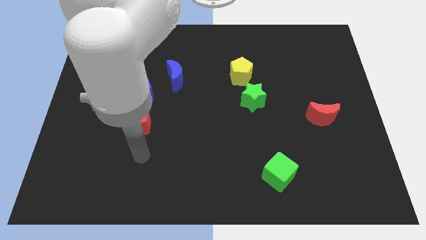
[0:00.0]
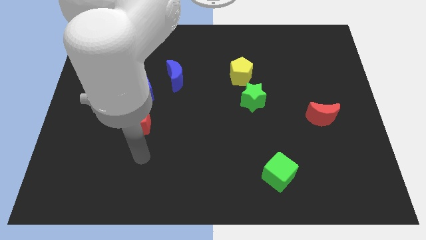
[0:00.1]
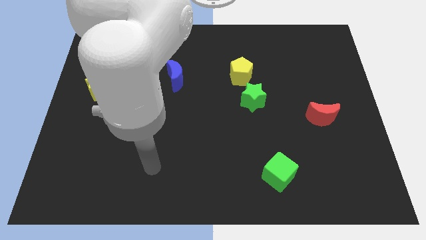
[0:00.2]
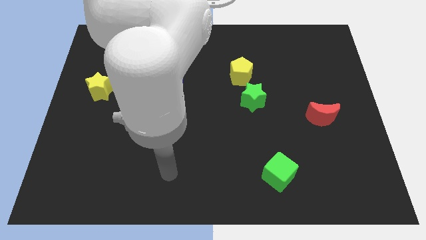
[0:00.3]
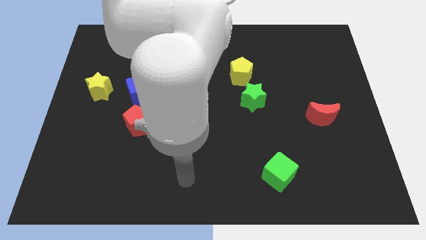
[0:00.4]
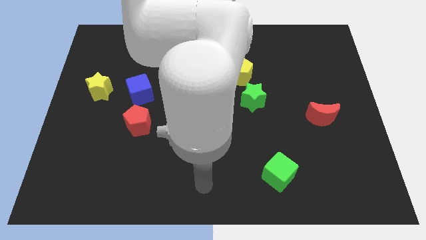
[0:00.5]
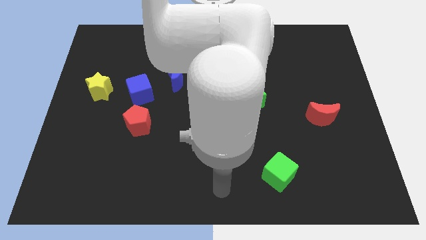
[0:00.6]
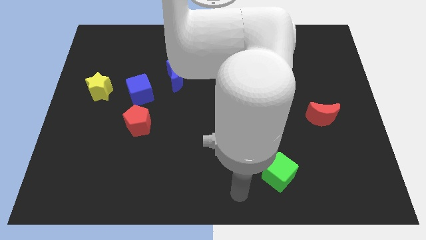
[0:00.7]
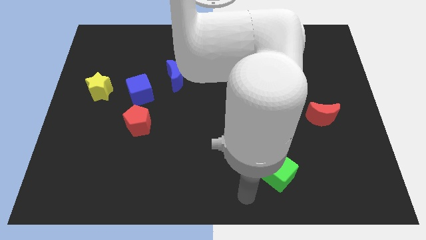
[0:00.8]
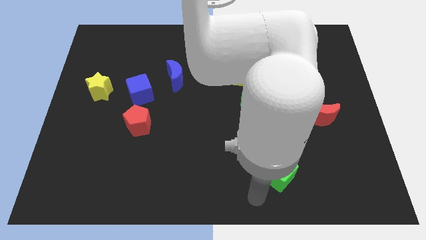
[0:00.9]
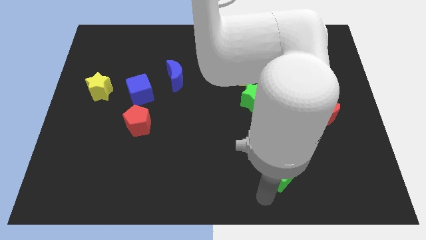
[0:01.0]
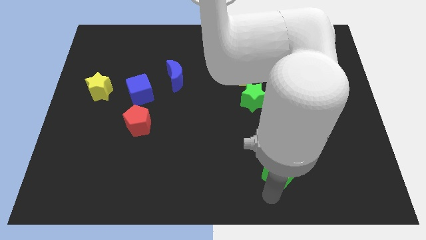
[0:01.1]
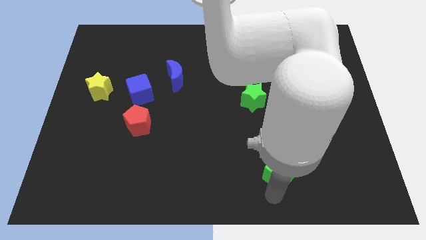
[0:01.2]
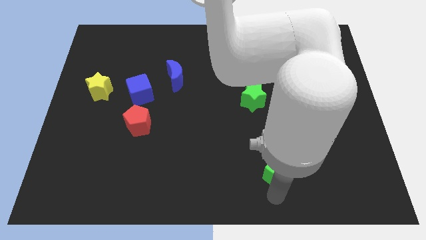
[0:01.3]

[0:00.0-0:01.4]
put your arm at the bottom of the green cube

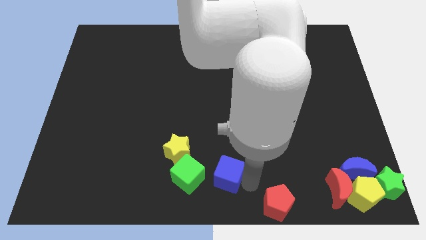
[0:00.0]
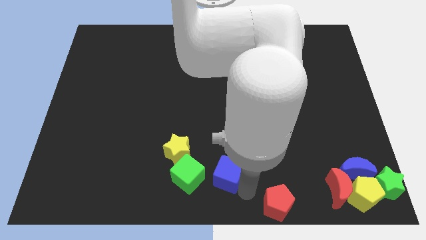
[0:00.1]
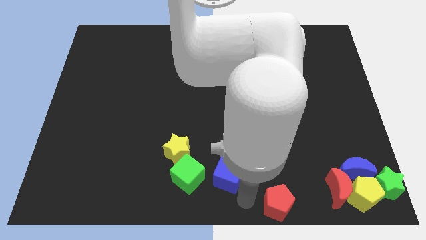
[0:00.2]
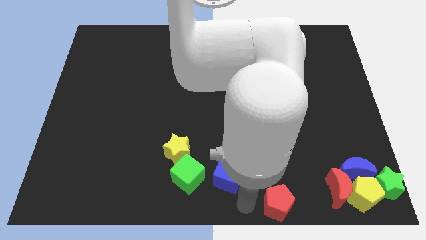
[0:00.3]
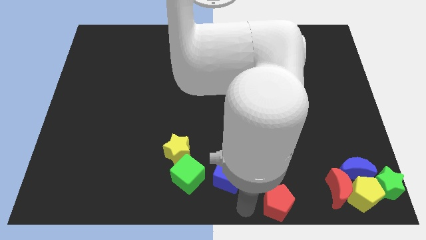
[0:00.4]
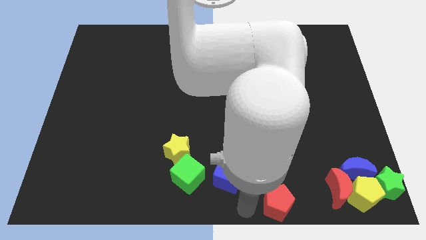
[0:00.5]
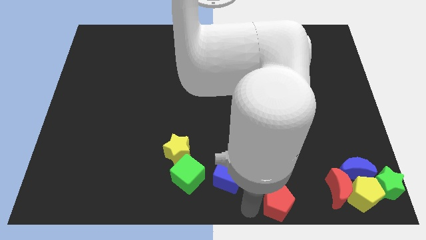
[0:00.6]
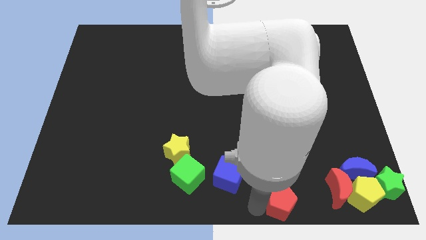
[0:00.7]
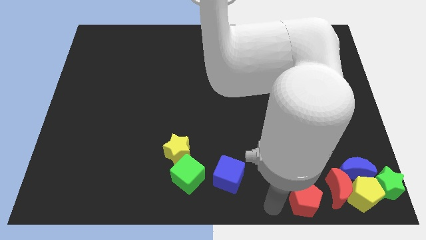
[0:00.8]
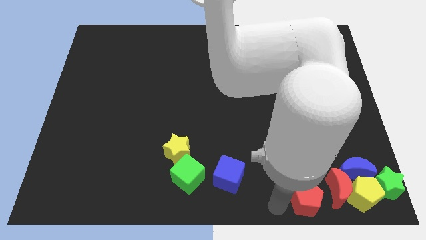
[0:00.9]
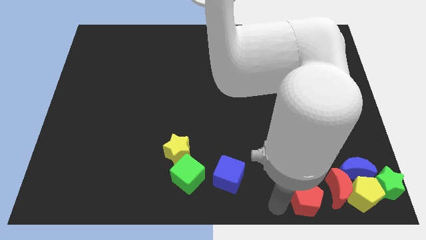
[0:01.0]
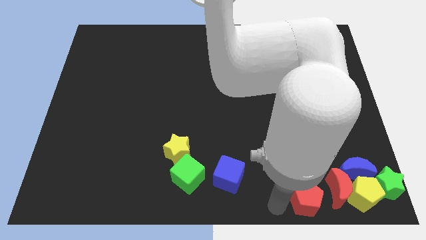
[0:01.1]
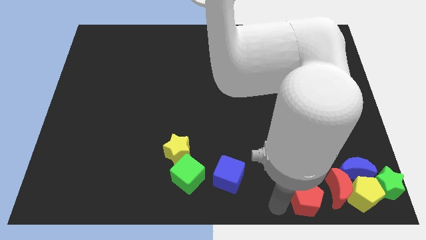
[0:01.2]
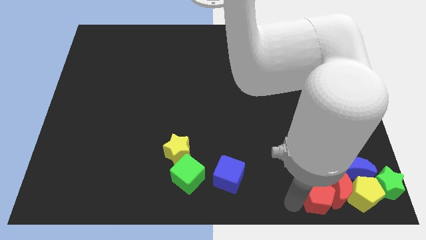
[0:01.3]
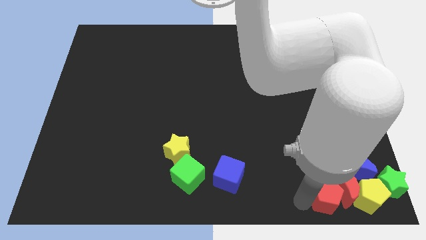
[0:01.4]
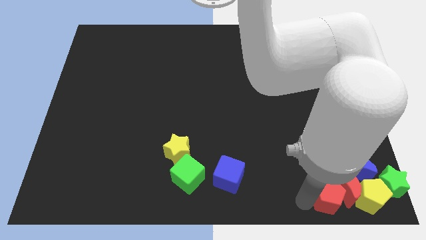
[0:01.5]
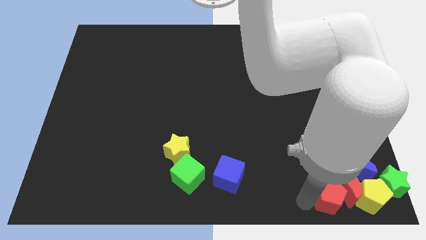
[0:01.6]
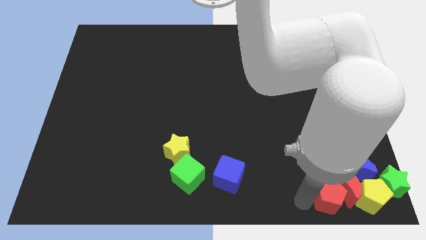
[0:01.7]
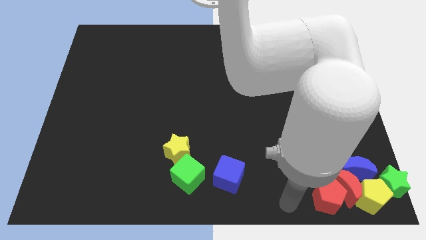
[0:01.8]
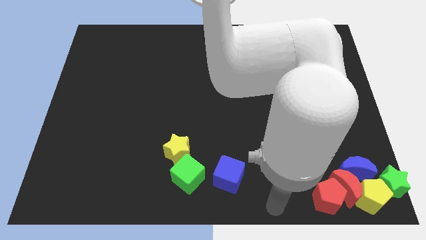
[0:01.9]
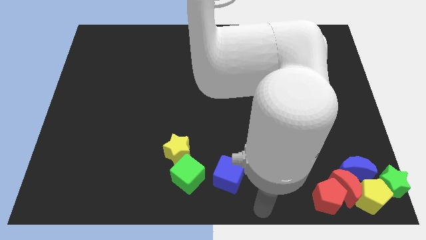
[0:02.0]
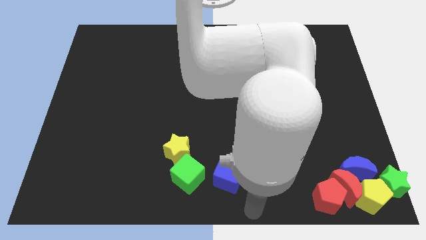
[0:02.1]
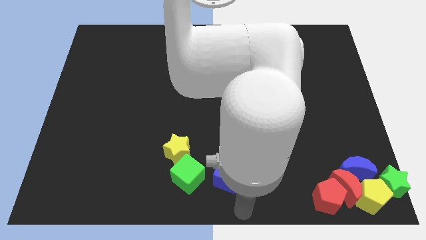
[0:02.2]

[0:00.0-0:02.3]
push red pentagon into the red crescent

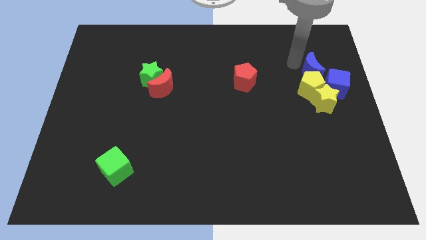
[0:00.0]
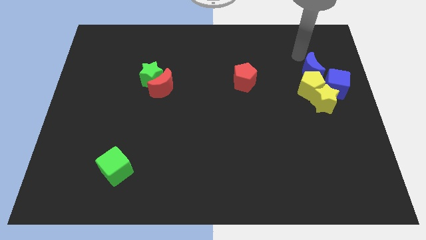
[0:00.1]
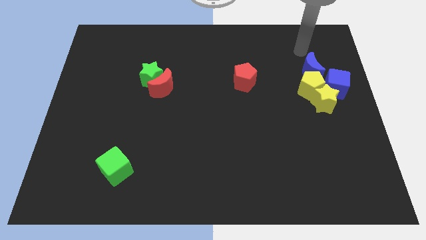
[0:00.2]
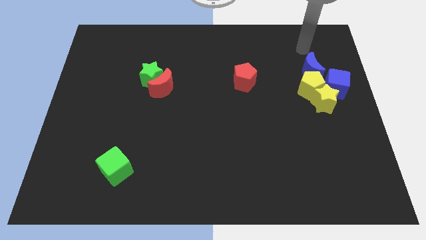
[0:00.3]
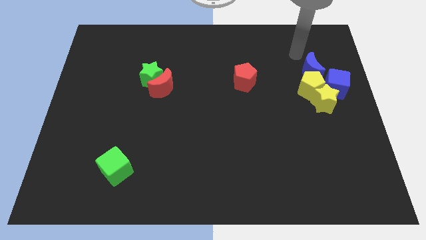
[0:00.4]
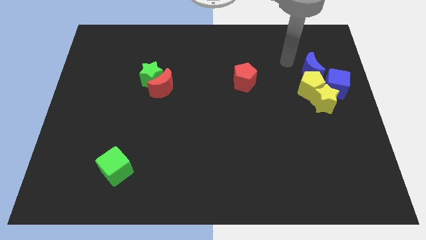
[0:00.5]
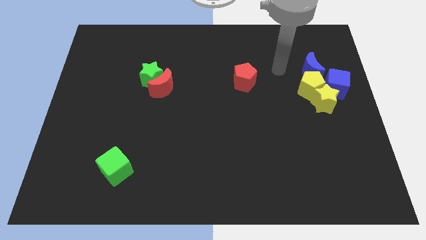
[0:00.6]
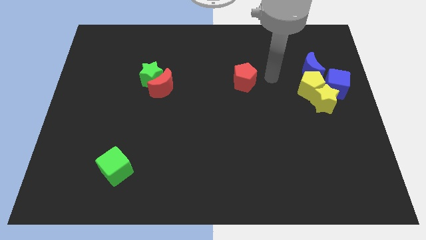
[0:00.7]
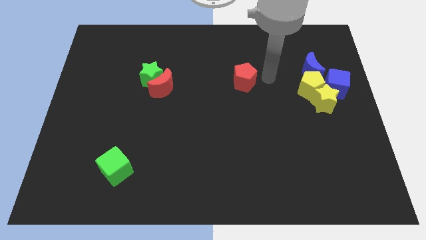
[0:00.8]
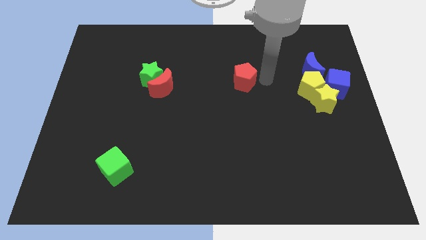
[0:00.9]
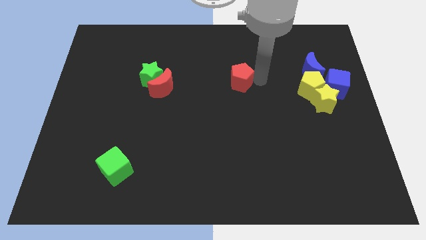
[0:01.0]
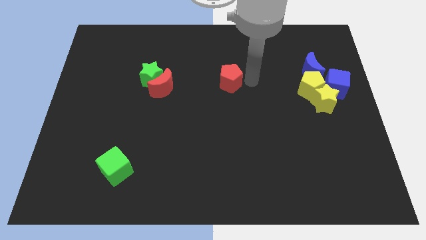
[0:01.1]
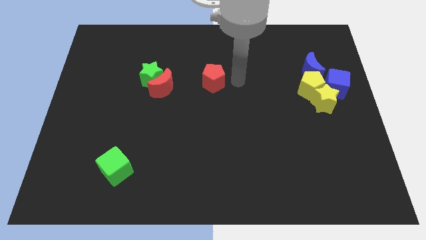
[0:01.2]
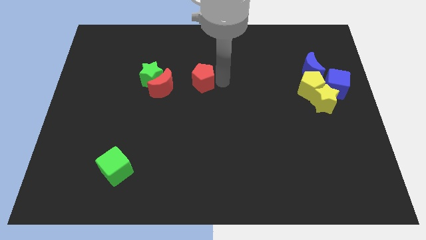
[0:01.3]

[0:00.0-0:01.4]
push the red pentagon towards the red crescent

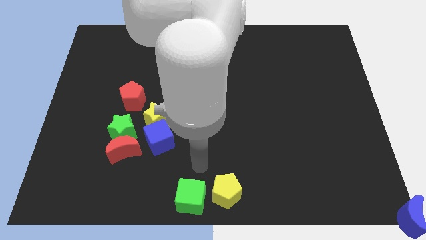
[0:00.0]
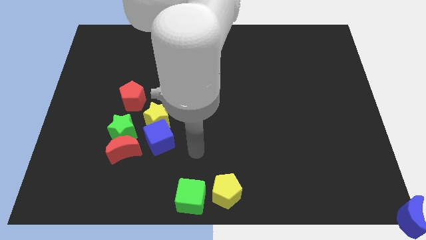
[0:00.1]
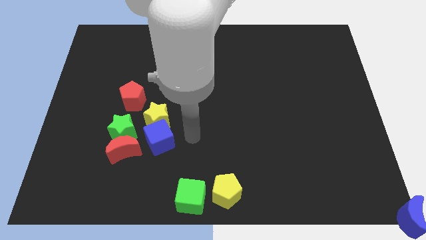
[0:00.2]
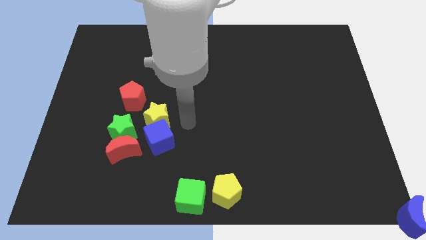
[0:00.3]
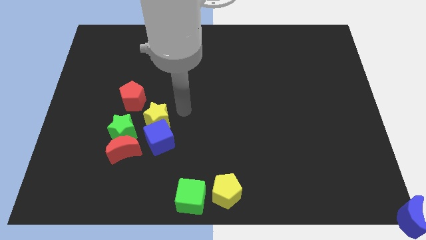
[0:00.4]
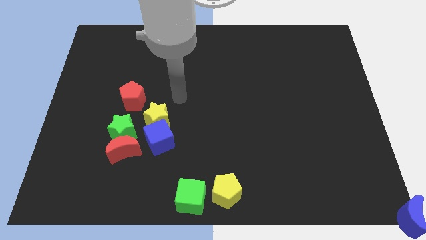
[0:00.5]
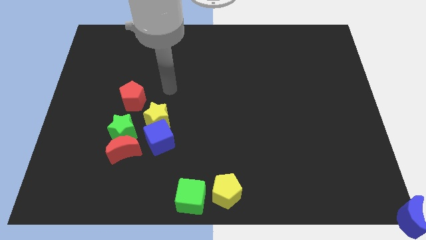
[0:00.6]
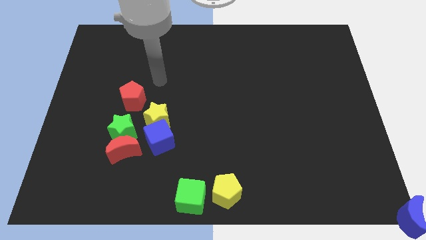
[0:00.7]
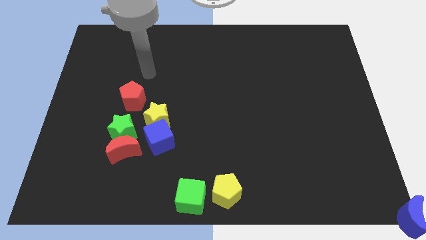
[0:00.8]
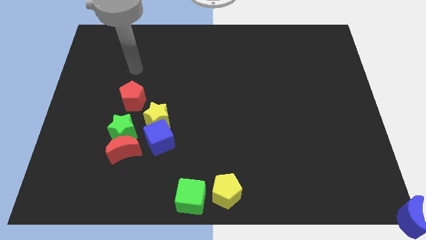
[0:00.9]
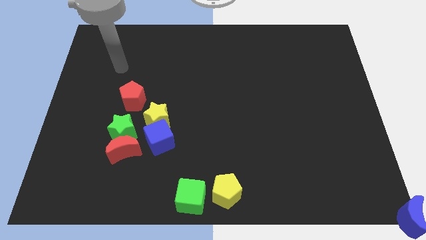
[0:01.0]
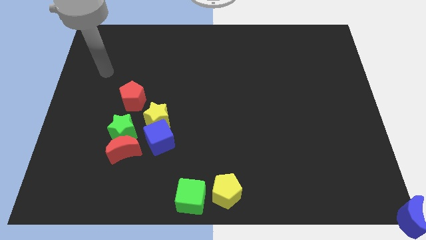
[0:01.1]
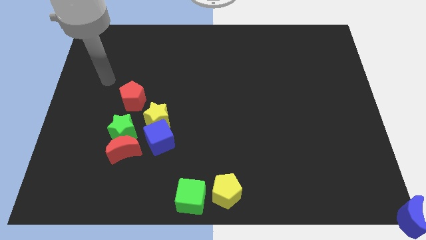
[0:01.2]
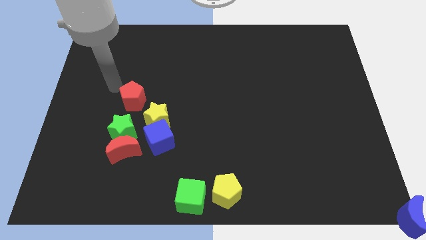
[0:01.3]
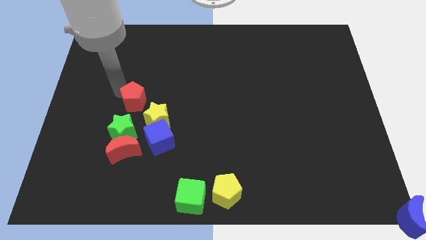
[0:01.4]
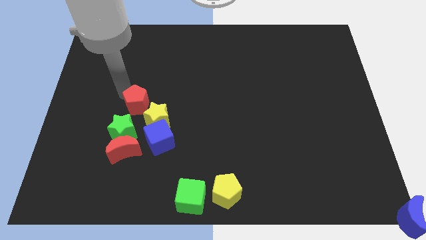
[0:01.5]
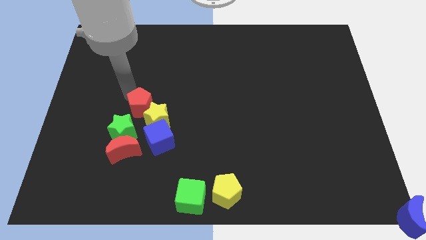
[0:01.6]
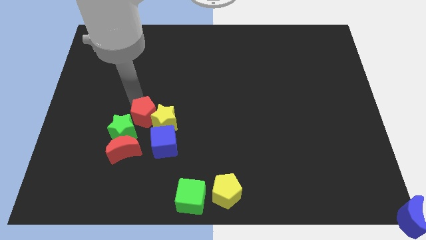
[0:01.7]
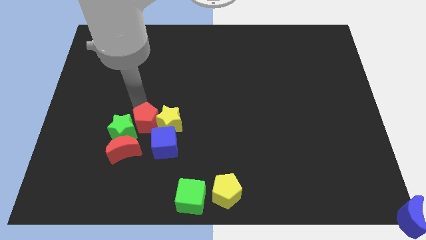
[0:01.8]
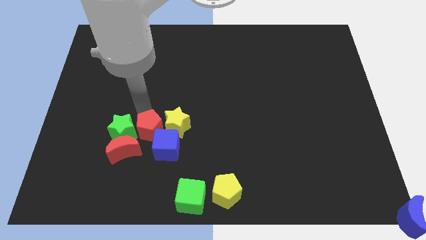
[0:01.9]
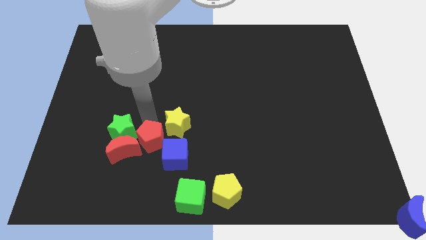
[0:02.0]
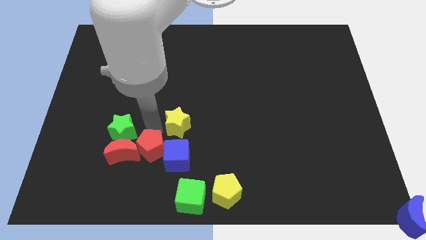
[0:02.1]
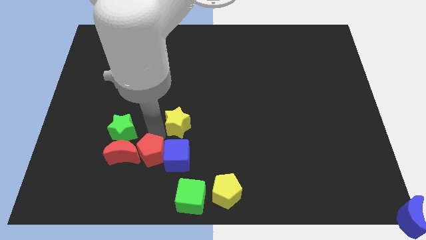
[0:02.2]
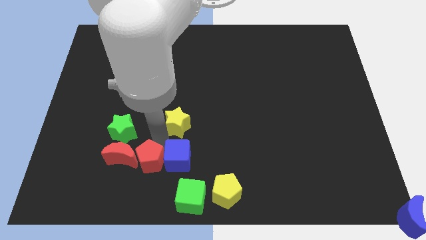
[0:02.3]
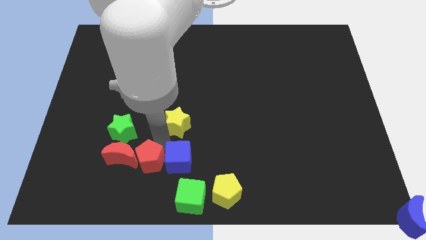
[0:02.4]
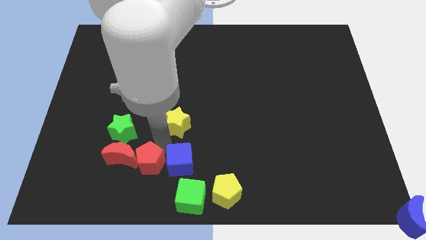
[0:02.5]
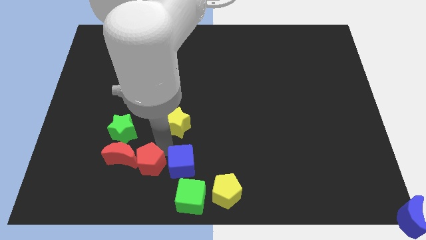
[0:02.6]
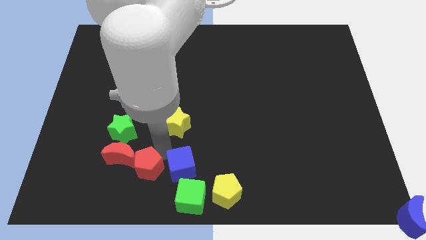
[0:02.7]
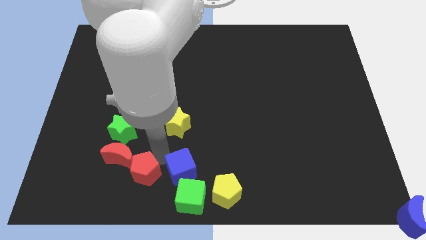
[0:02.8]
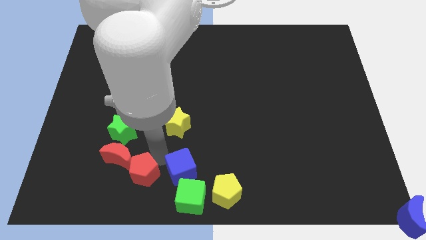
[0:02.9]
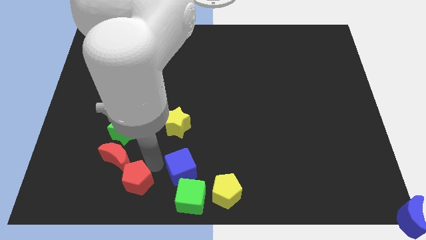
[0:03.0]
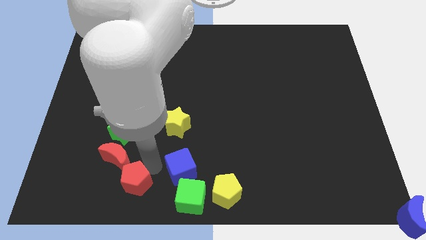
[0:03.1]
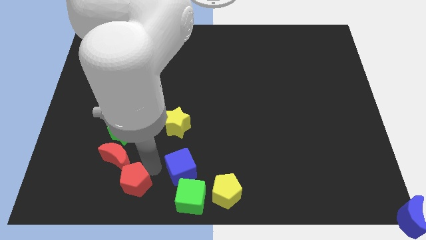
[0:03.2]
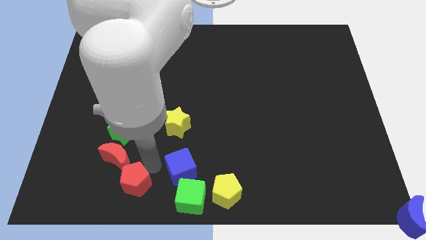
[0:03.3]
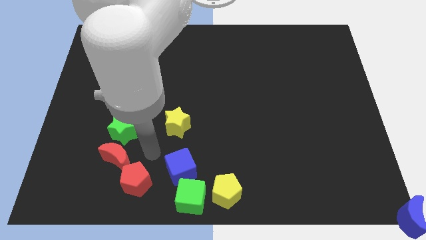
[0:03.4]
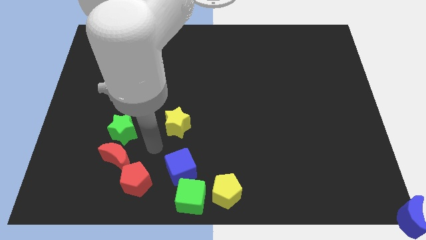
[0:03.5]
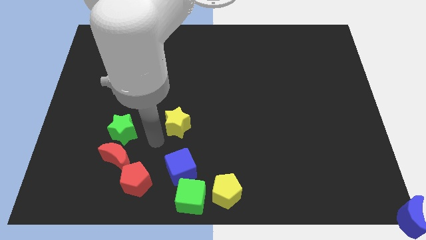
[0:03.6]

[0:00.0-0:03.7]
move the red pentagon left to the blue cube

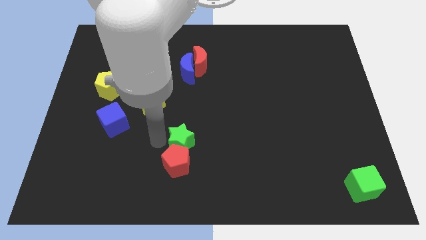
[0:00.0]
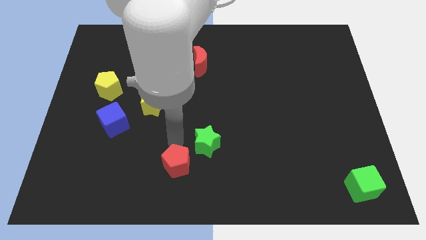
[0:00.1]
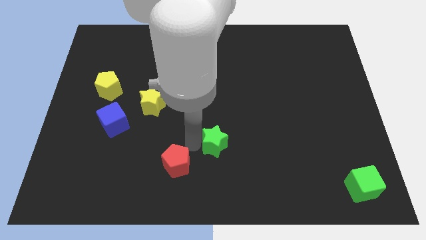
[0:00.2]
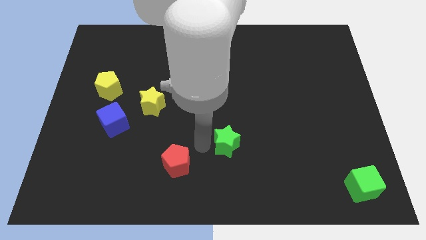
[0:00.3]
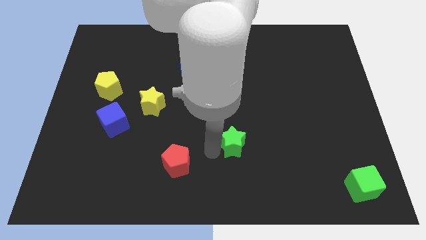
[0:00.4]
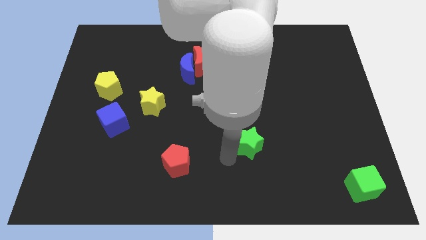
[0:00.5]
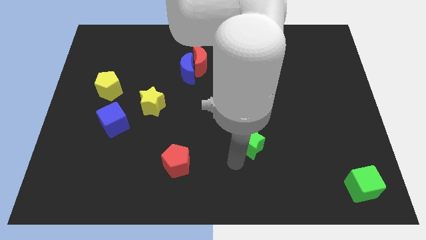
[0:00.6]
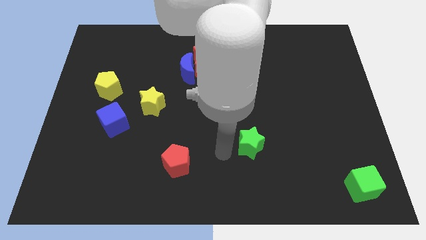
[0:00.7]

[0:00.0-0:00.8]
move the green star slightly towards right to the board
